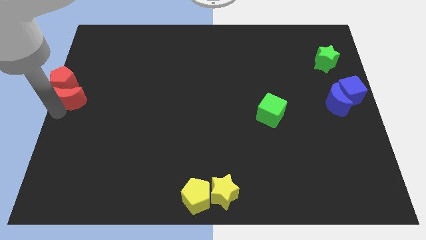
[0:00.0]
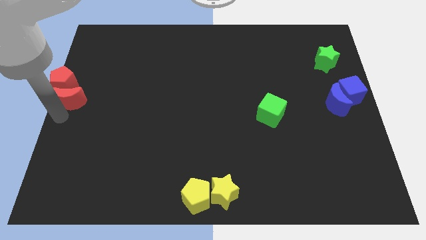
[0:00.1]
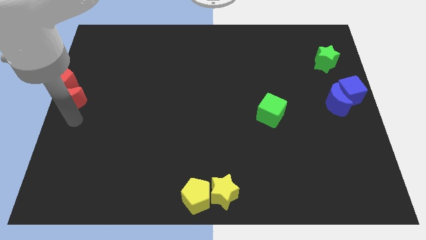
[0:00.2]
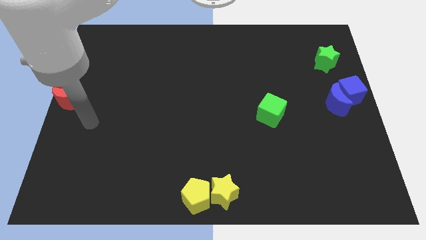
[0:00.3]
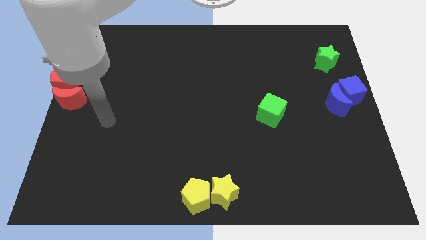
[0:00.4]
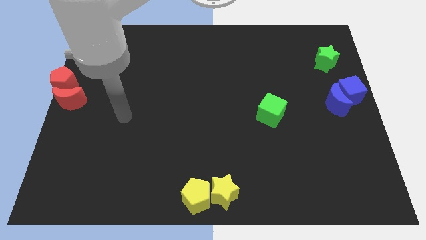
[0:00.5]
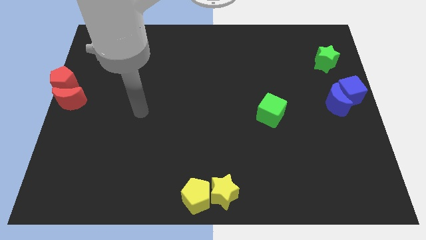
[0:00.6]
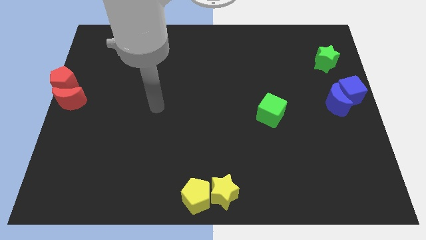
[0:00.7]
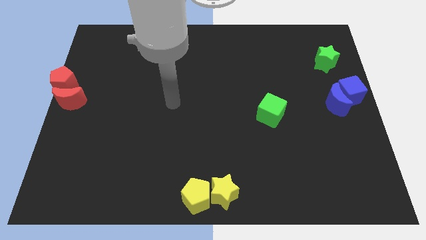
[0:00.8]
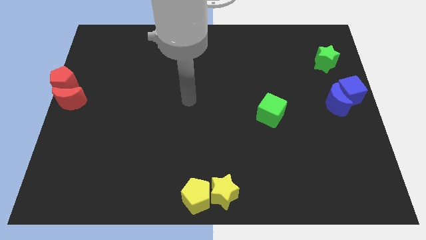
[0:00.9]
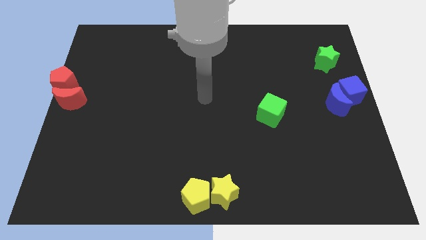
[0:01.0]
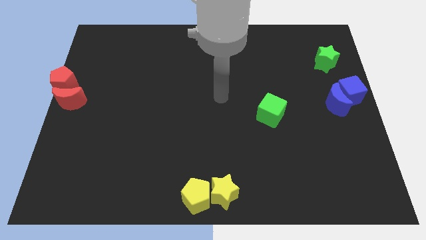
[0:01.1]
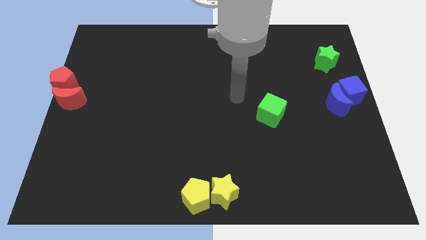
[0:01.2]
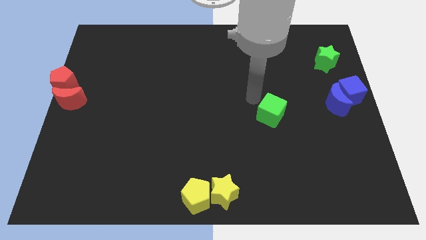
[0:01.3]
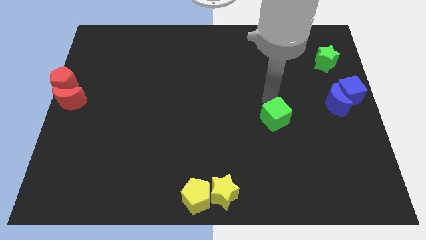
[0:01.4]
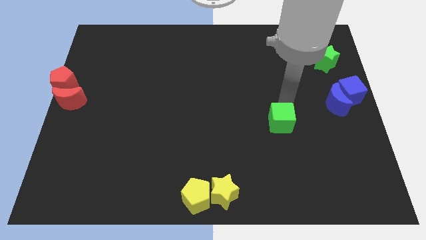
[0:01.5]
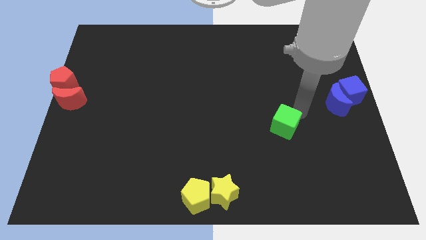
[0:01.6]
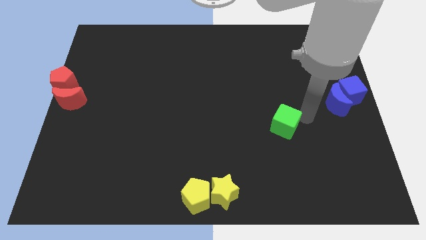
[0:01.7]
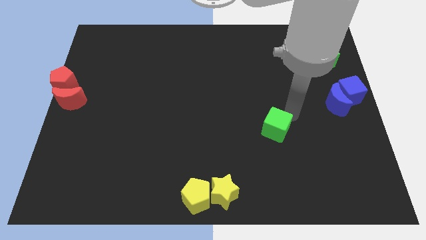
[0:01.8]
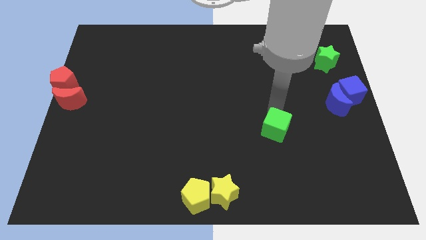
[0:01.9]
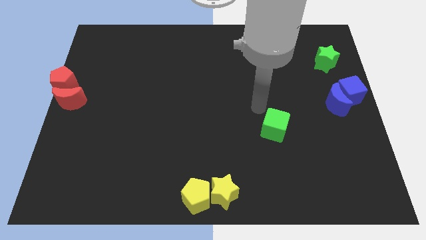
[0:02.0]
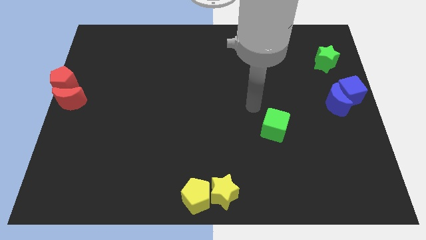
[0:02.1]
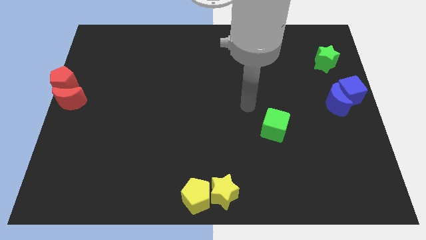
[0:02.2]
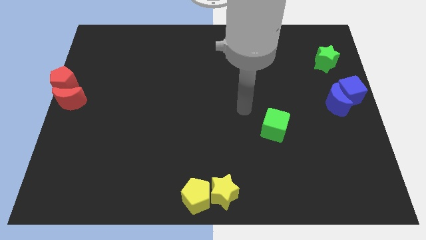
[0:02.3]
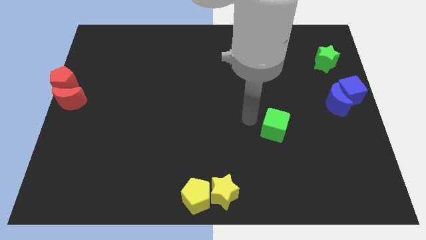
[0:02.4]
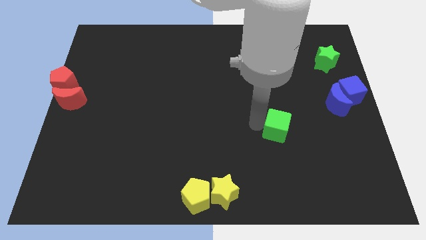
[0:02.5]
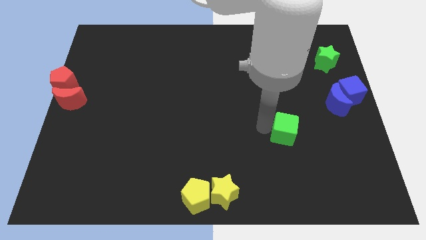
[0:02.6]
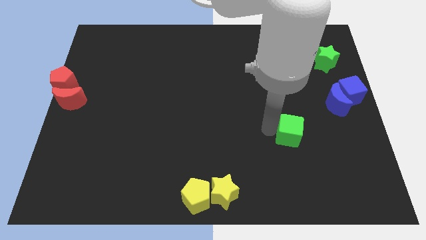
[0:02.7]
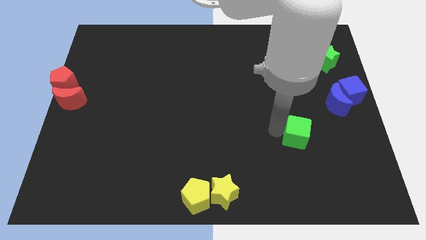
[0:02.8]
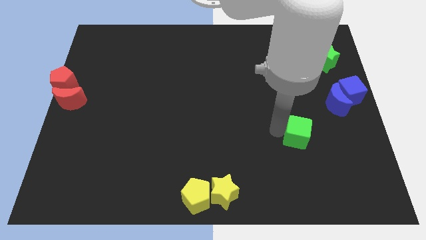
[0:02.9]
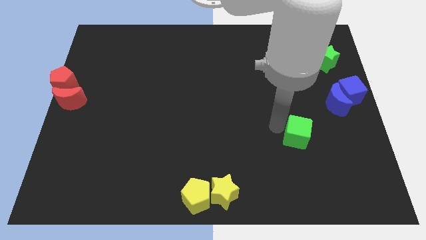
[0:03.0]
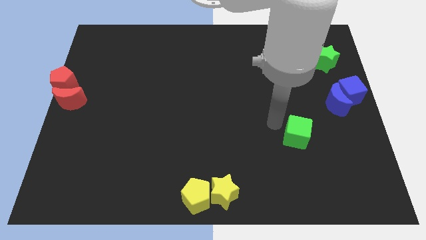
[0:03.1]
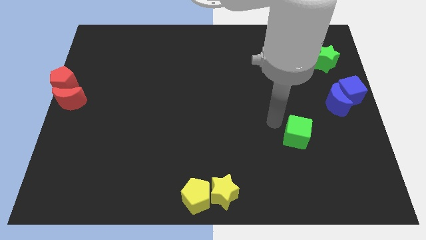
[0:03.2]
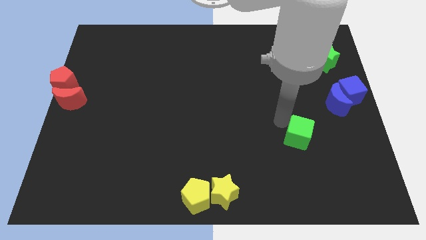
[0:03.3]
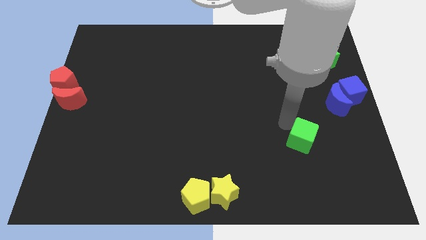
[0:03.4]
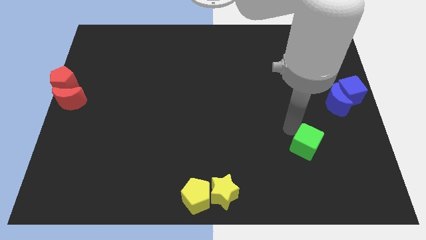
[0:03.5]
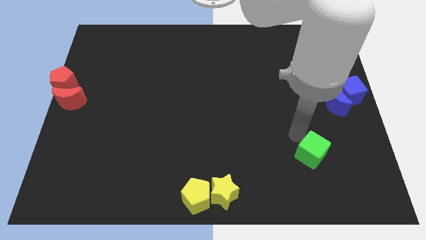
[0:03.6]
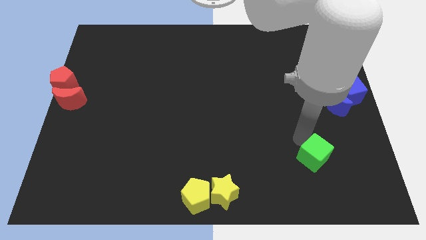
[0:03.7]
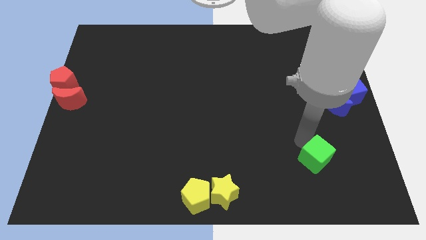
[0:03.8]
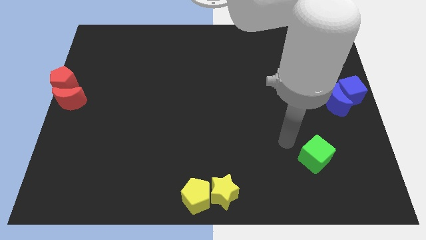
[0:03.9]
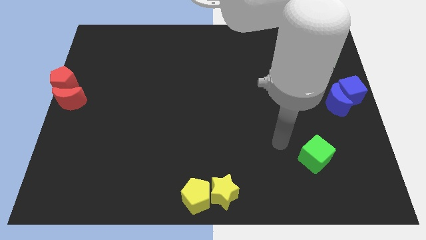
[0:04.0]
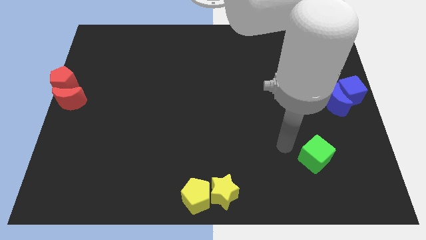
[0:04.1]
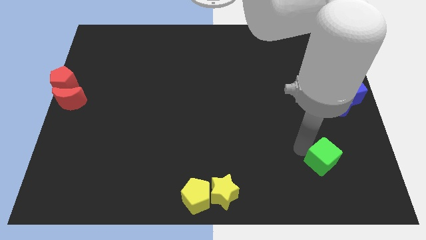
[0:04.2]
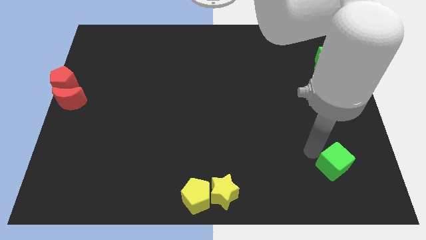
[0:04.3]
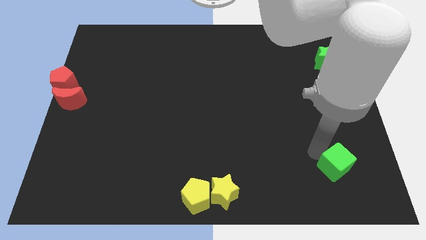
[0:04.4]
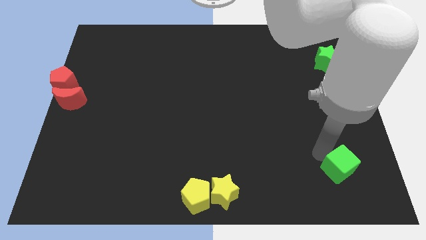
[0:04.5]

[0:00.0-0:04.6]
slide the green cube towards the bottom right of the table

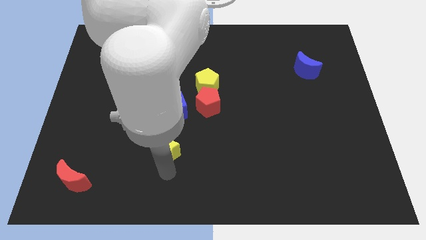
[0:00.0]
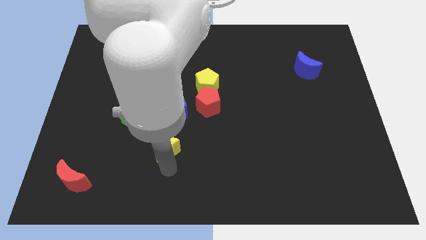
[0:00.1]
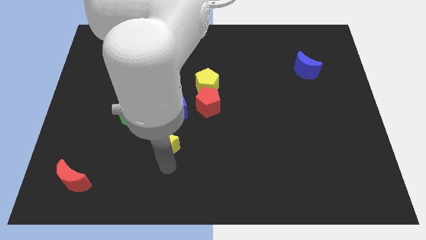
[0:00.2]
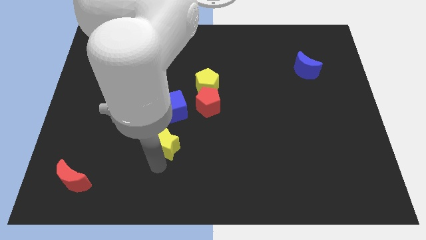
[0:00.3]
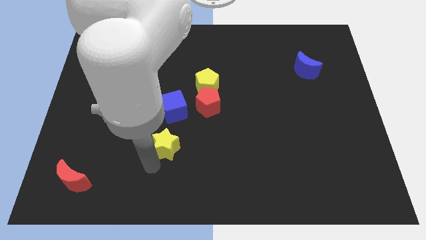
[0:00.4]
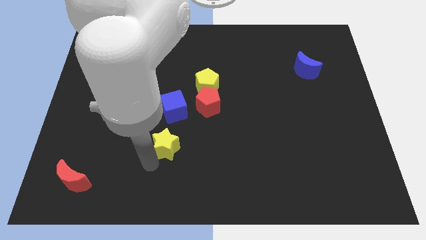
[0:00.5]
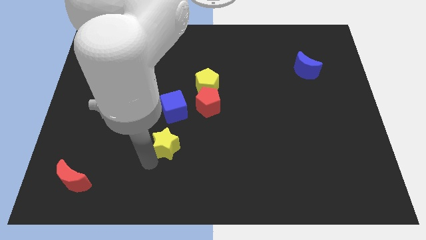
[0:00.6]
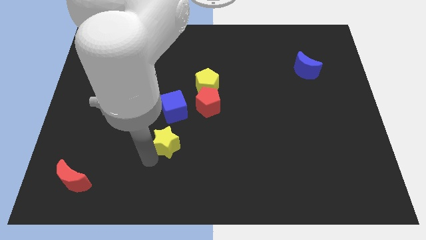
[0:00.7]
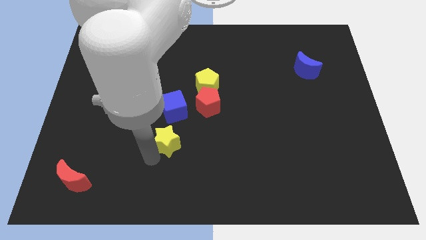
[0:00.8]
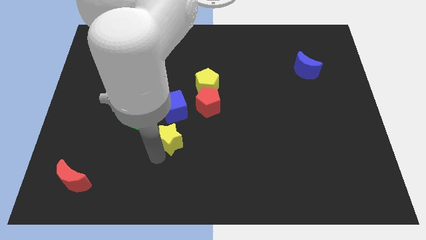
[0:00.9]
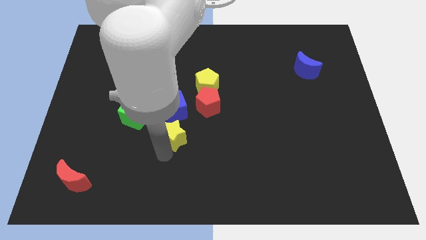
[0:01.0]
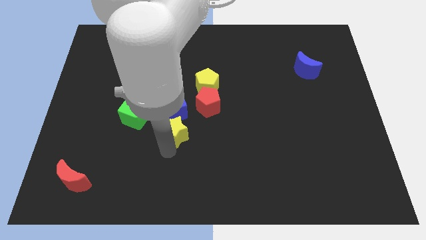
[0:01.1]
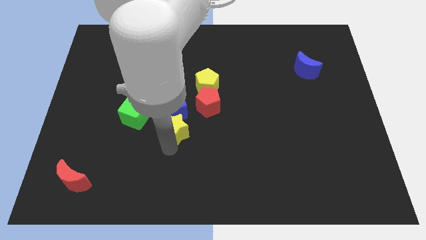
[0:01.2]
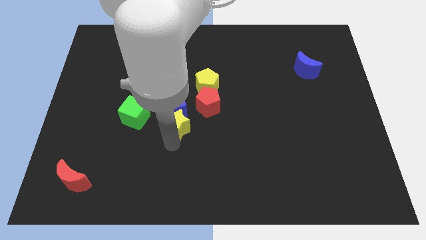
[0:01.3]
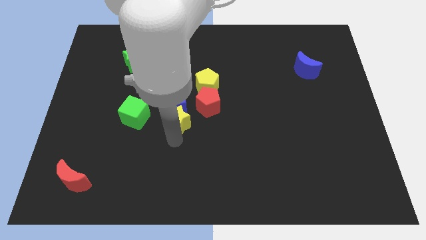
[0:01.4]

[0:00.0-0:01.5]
place the yellow star below the blue cube

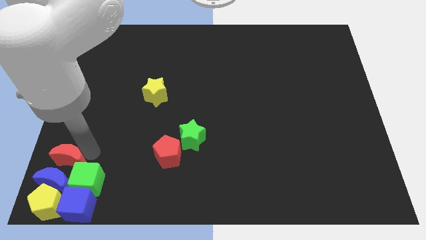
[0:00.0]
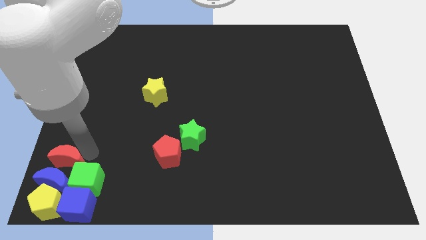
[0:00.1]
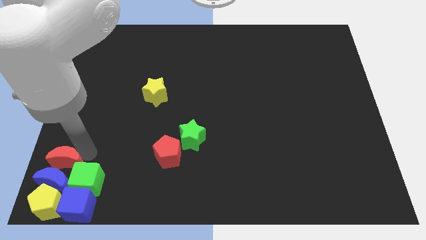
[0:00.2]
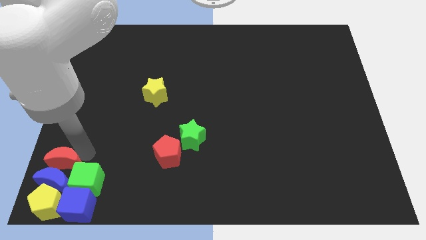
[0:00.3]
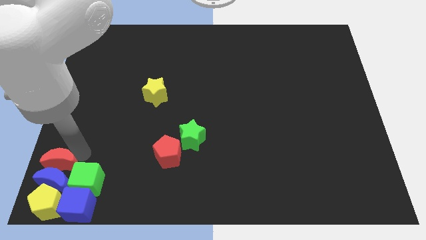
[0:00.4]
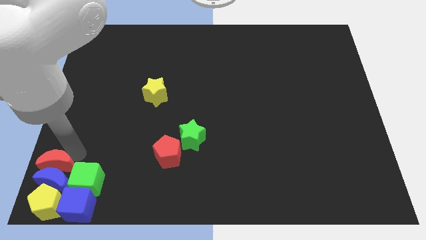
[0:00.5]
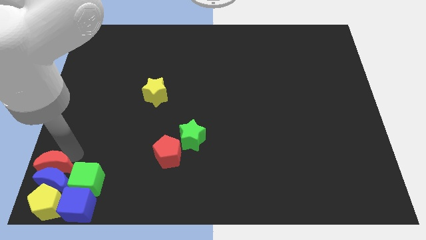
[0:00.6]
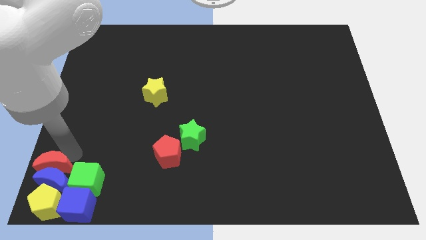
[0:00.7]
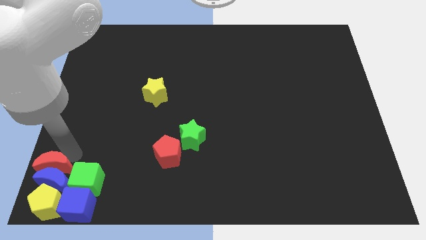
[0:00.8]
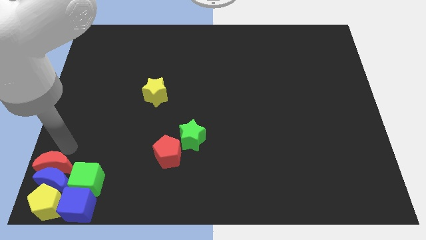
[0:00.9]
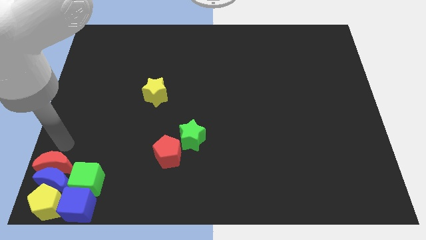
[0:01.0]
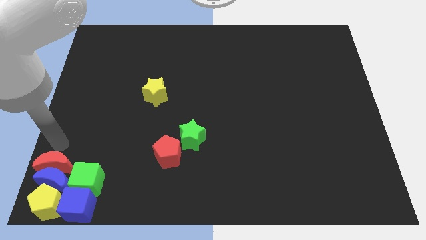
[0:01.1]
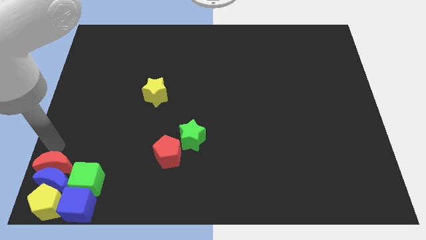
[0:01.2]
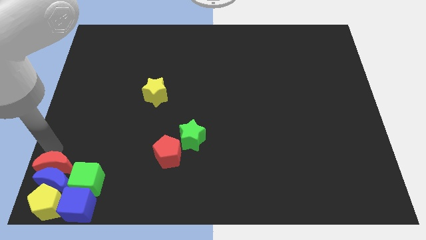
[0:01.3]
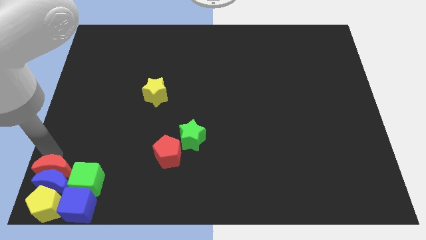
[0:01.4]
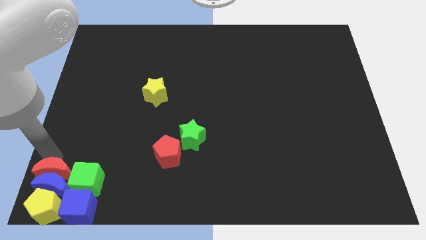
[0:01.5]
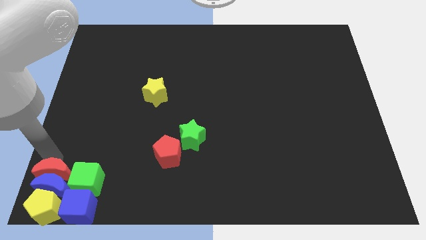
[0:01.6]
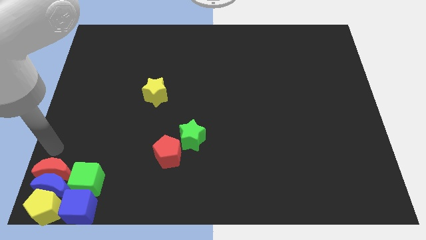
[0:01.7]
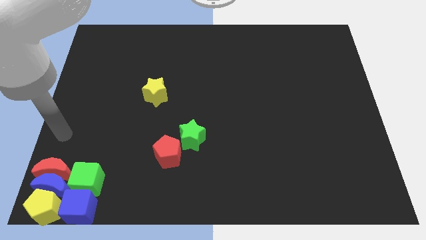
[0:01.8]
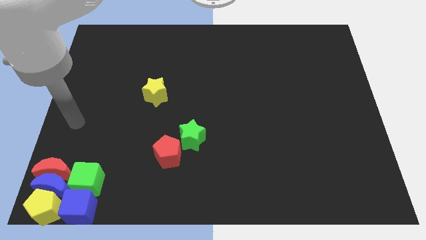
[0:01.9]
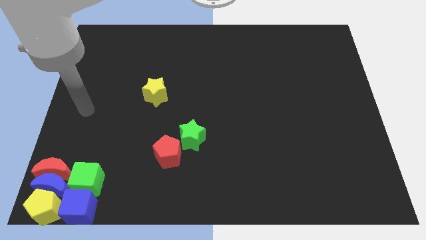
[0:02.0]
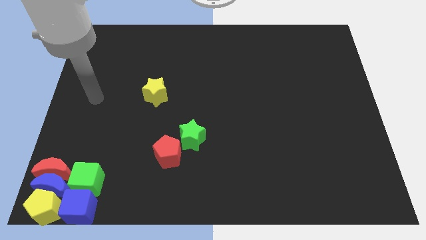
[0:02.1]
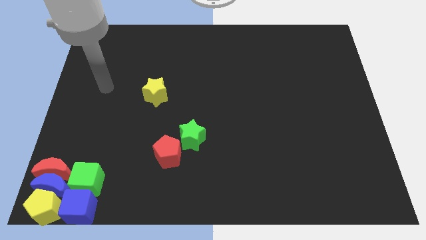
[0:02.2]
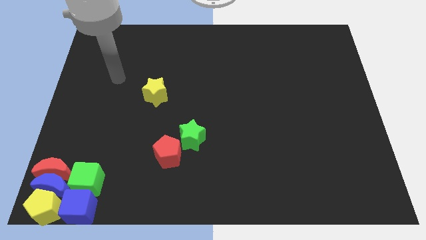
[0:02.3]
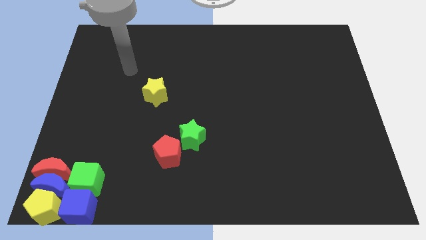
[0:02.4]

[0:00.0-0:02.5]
place red moon to the top of the blue moon

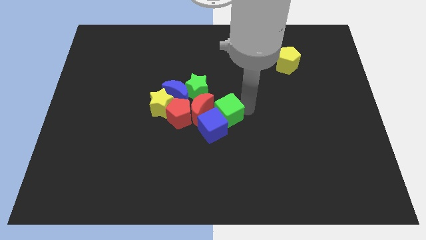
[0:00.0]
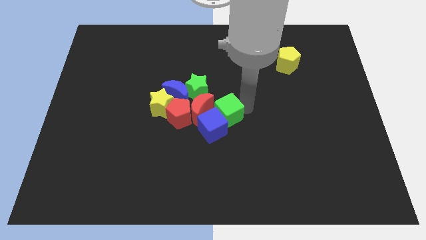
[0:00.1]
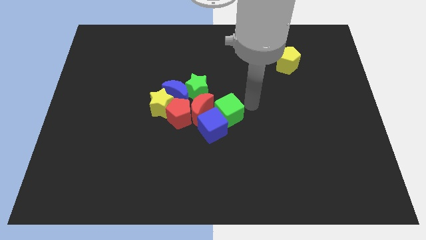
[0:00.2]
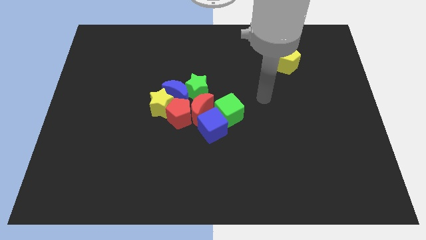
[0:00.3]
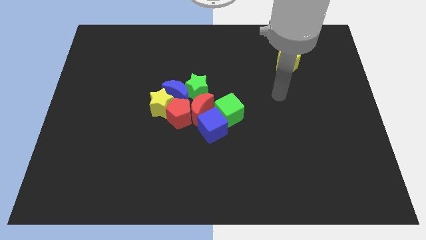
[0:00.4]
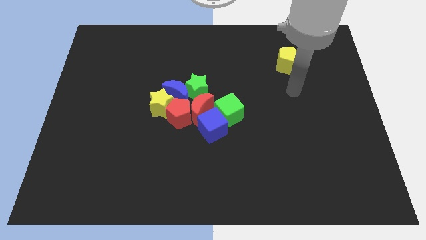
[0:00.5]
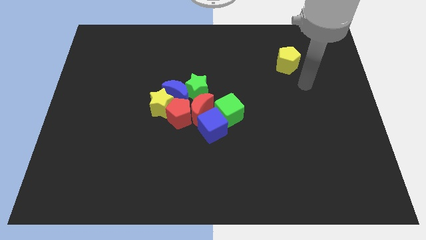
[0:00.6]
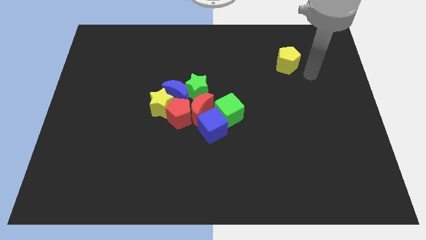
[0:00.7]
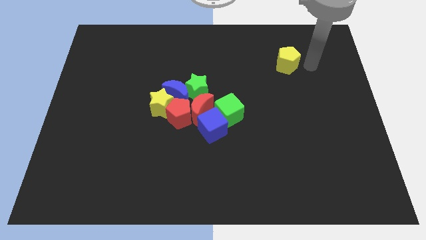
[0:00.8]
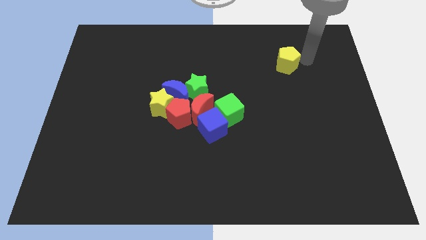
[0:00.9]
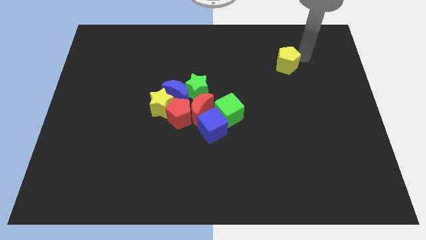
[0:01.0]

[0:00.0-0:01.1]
move your arm away from the green cube
